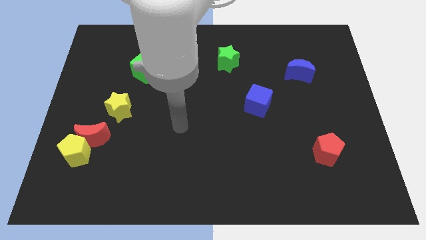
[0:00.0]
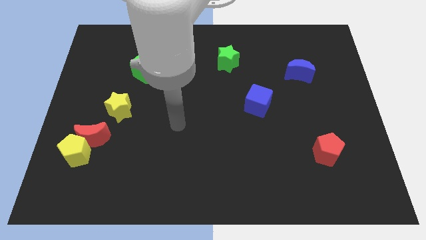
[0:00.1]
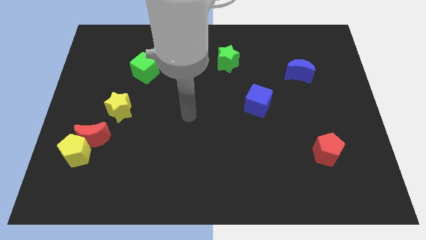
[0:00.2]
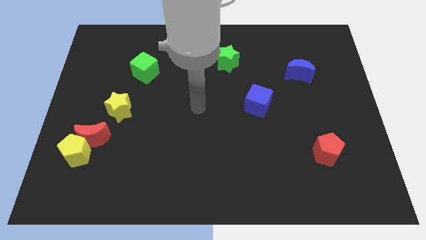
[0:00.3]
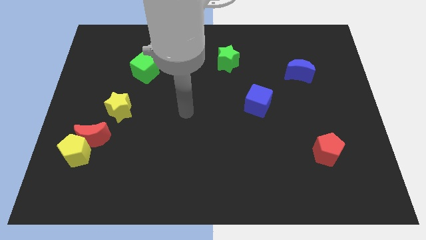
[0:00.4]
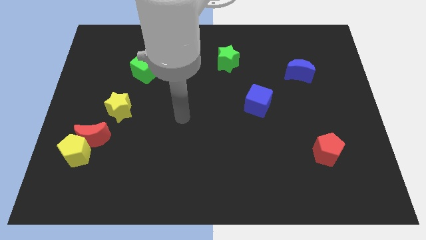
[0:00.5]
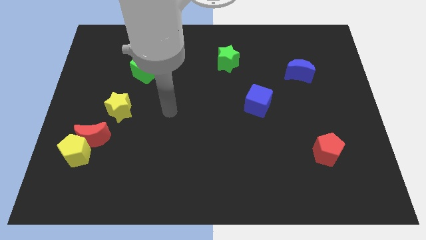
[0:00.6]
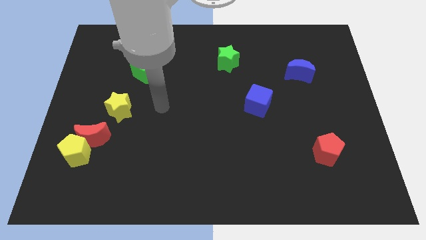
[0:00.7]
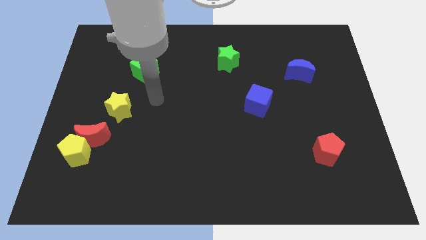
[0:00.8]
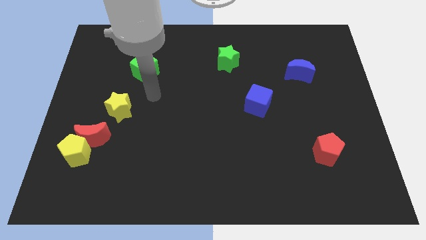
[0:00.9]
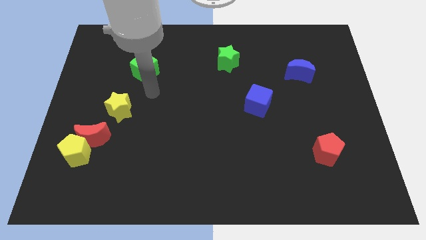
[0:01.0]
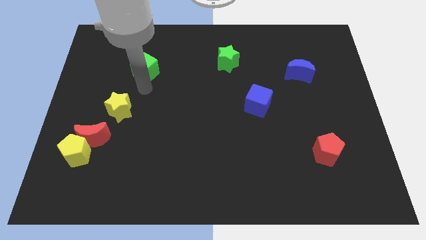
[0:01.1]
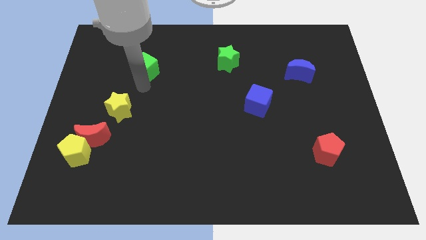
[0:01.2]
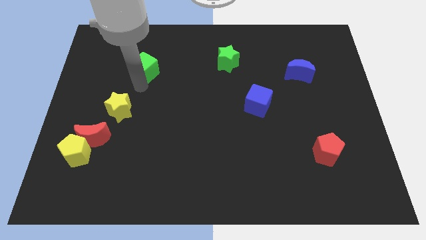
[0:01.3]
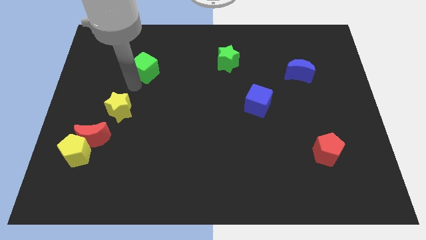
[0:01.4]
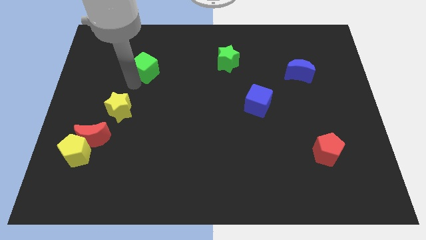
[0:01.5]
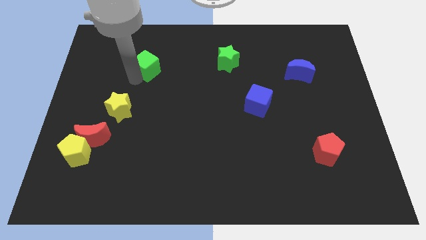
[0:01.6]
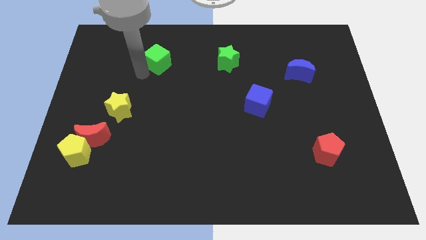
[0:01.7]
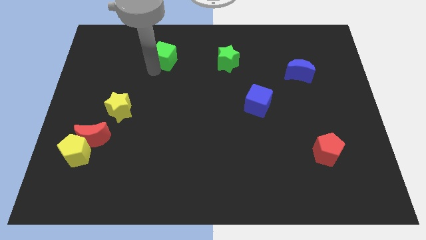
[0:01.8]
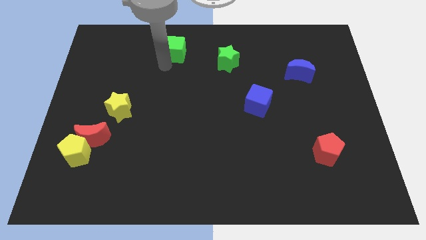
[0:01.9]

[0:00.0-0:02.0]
slightly move the green cube towards the green star

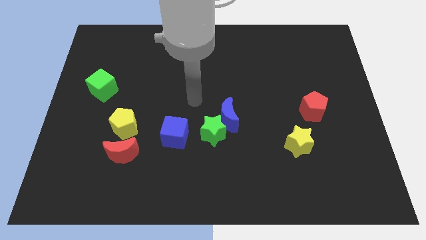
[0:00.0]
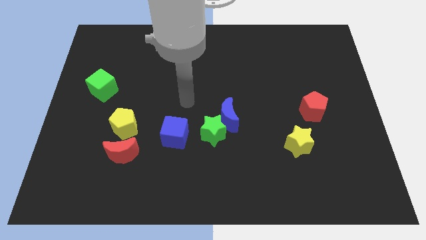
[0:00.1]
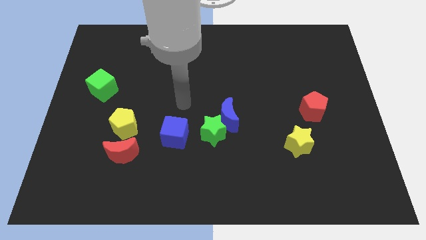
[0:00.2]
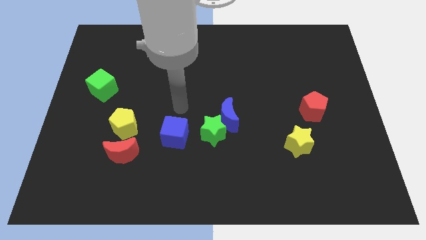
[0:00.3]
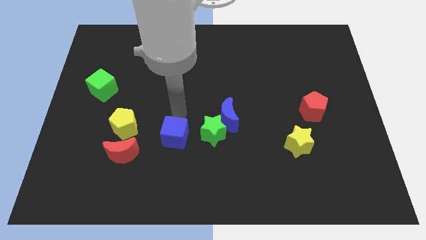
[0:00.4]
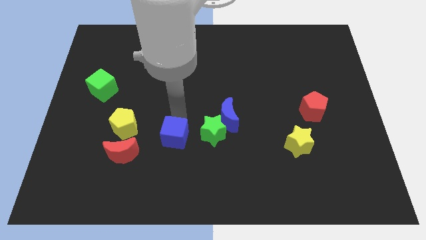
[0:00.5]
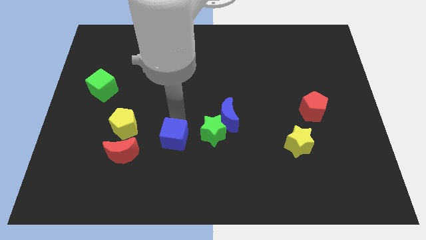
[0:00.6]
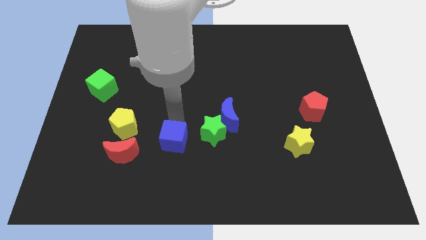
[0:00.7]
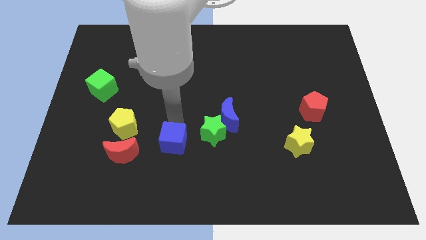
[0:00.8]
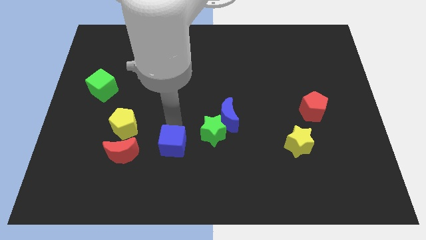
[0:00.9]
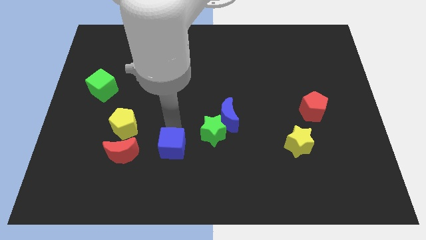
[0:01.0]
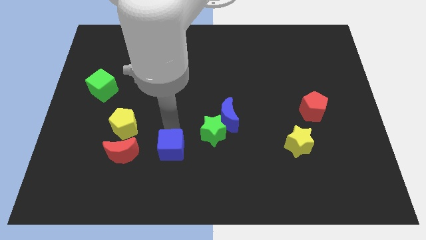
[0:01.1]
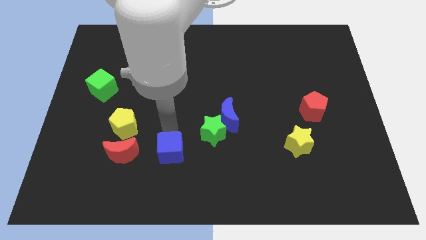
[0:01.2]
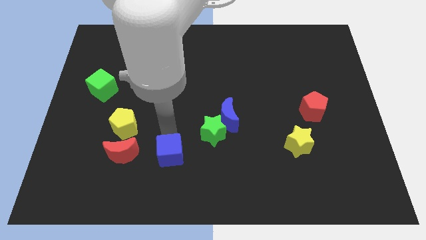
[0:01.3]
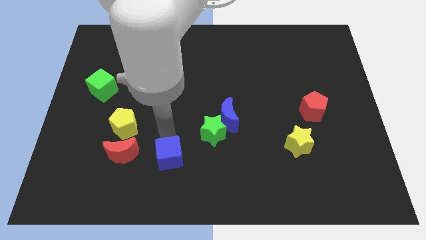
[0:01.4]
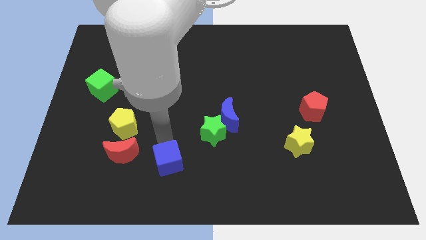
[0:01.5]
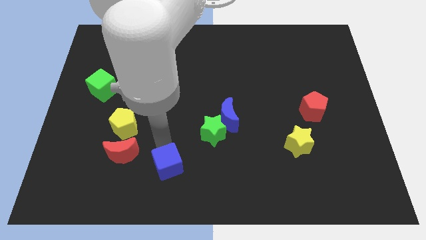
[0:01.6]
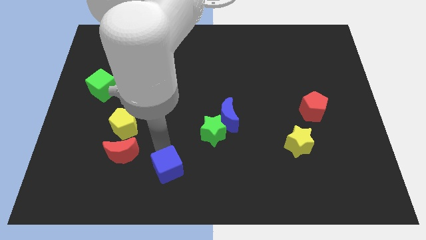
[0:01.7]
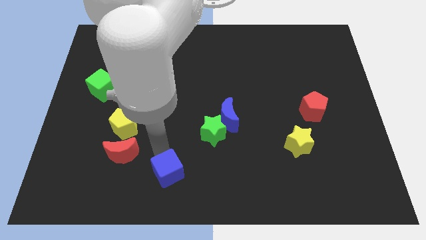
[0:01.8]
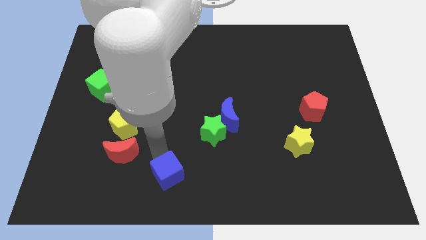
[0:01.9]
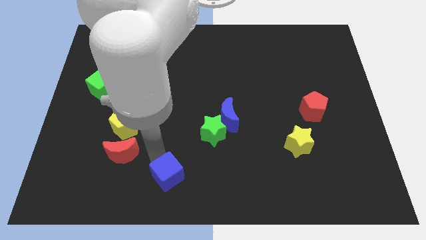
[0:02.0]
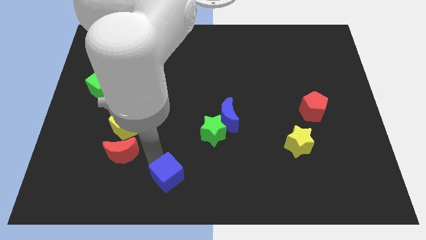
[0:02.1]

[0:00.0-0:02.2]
push the blue cube to the bottom right of the red crescent

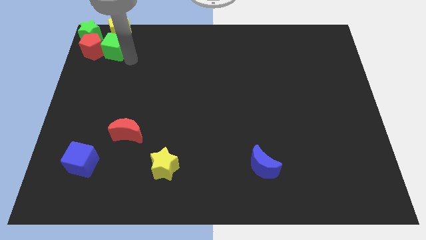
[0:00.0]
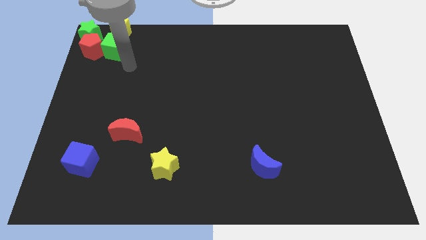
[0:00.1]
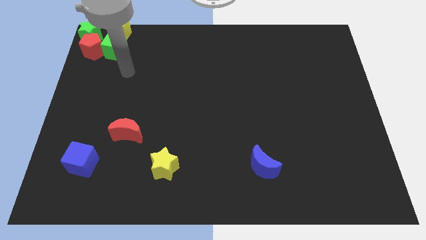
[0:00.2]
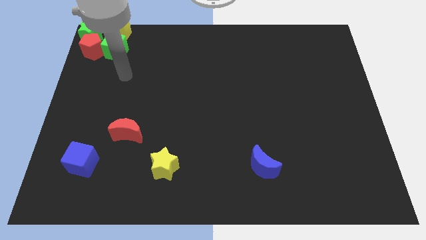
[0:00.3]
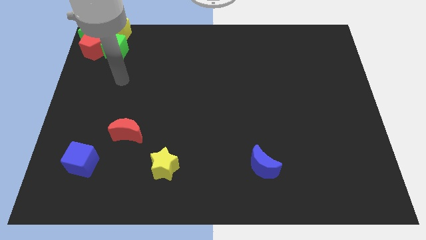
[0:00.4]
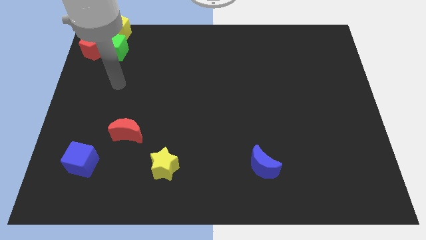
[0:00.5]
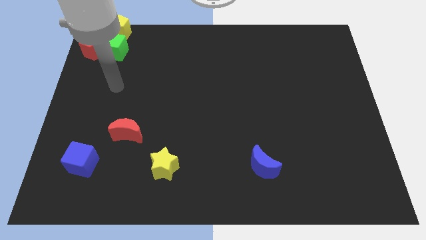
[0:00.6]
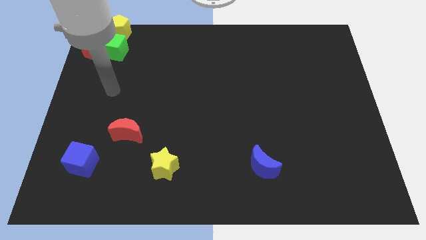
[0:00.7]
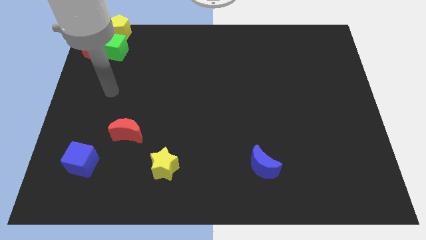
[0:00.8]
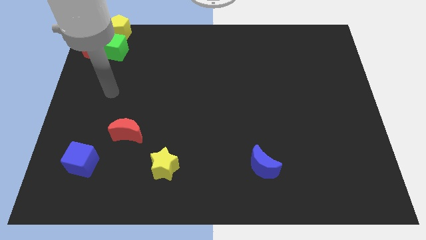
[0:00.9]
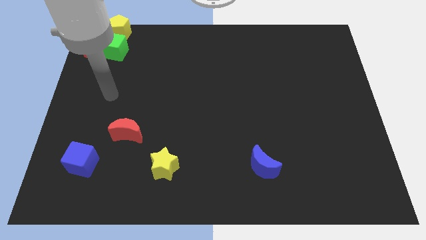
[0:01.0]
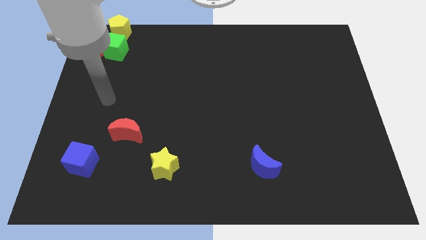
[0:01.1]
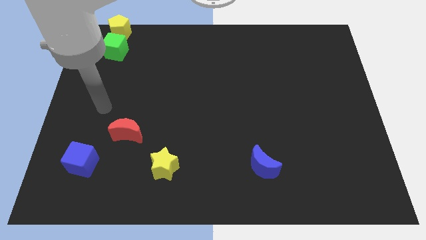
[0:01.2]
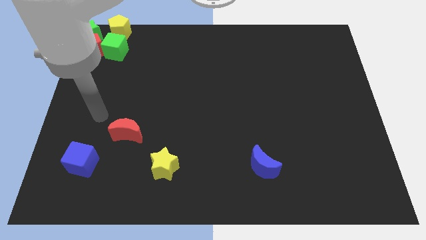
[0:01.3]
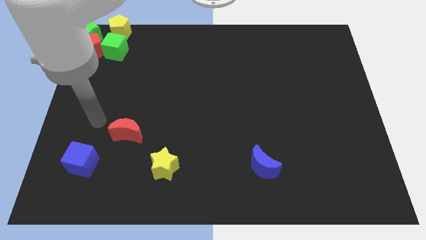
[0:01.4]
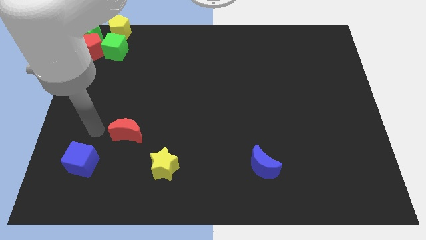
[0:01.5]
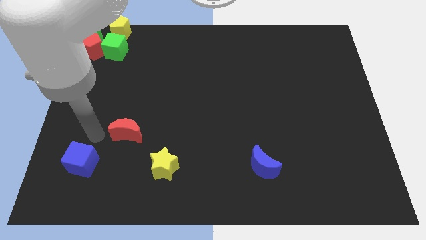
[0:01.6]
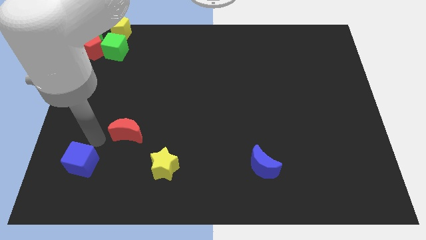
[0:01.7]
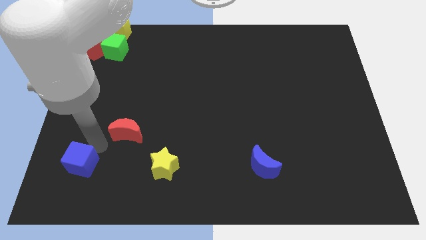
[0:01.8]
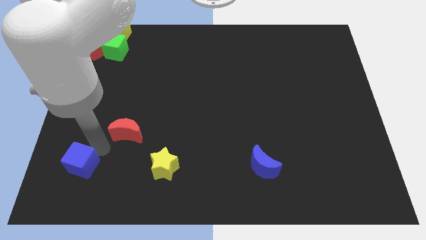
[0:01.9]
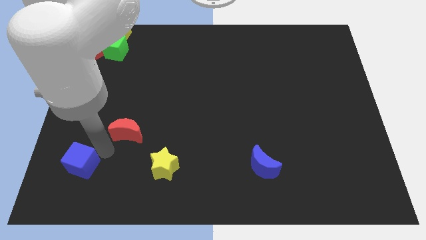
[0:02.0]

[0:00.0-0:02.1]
point your arm between blue cube and red moon

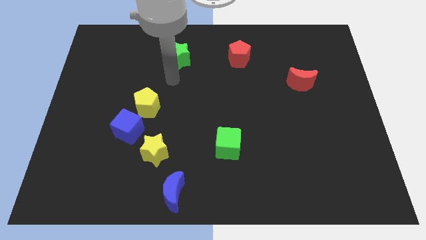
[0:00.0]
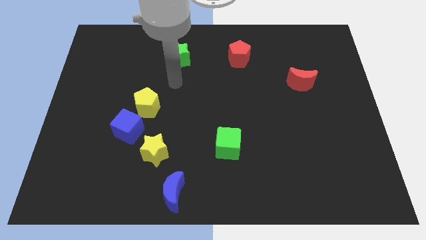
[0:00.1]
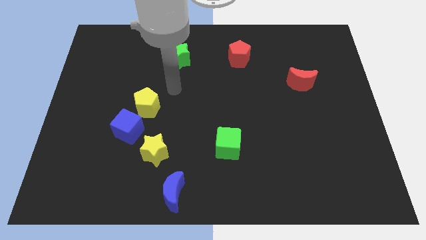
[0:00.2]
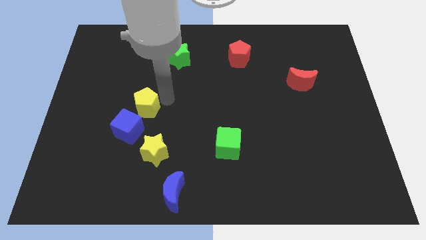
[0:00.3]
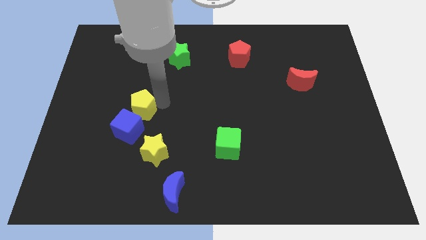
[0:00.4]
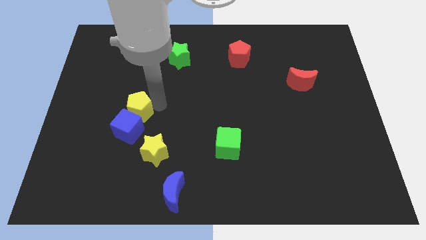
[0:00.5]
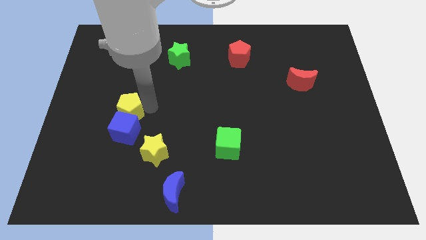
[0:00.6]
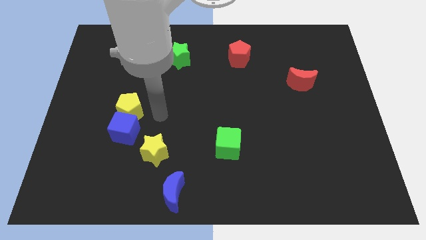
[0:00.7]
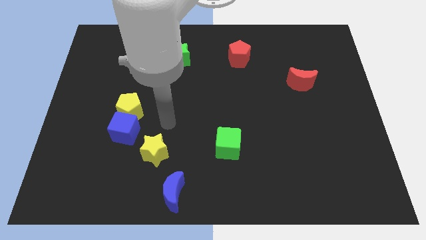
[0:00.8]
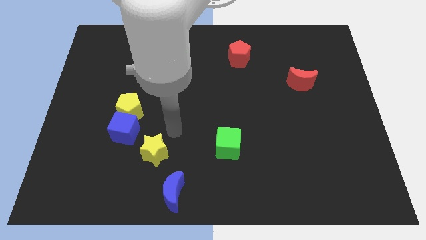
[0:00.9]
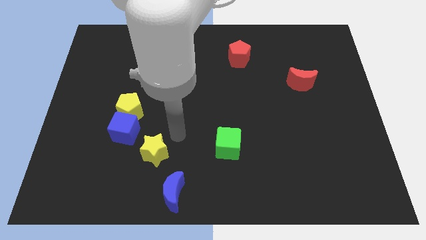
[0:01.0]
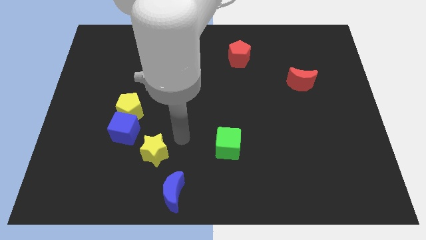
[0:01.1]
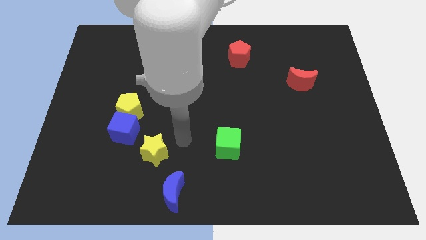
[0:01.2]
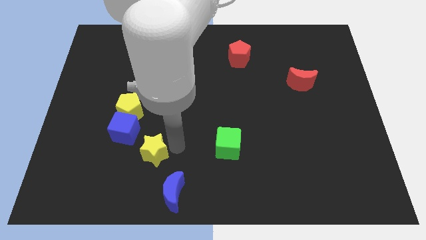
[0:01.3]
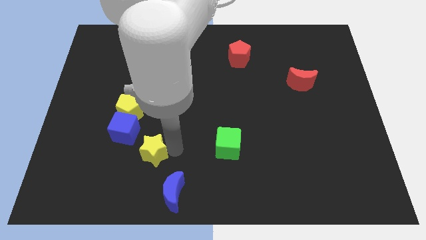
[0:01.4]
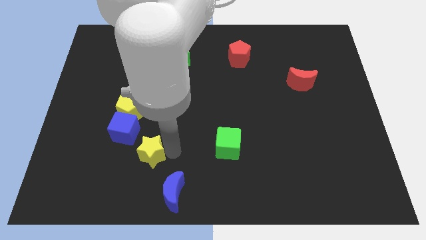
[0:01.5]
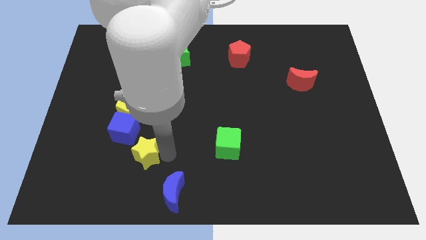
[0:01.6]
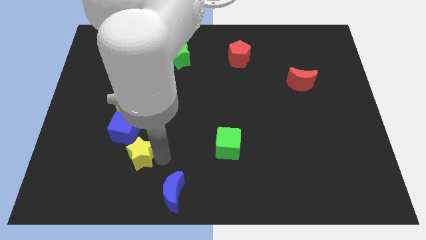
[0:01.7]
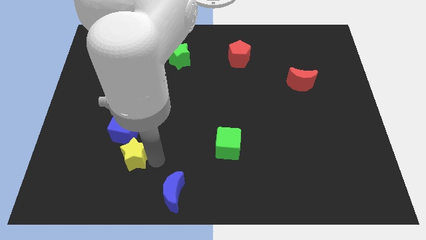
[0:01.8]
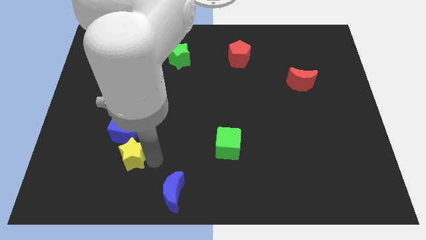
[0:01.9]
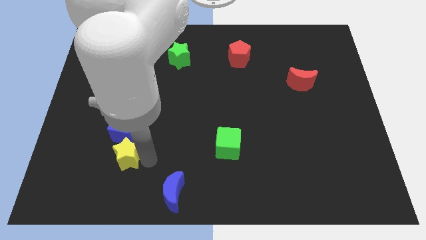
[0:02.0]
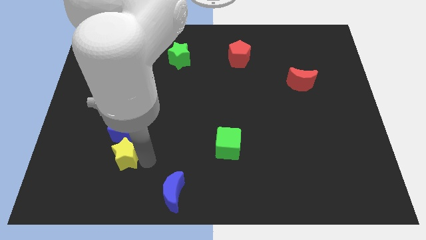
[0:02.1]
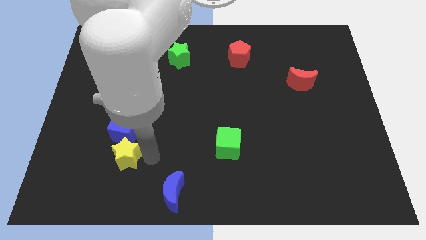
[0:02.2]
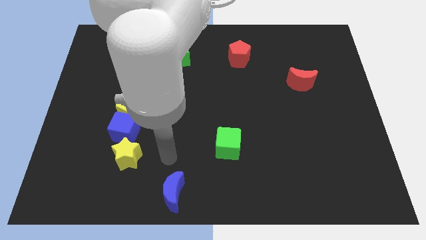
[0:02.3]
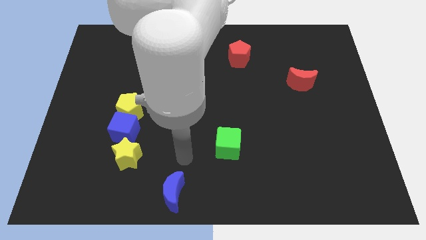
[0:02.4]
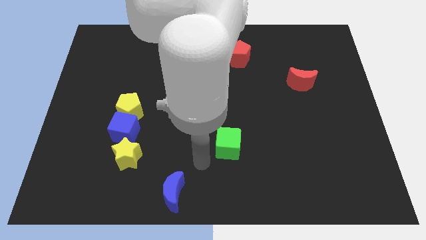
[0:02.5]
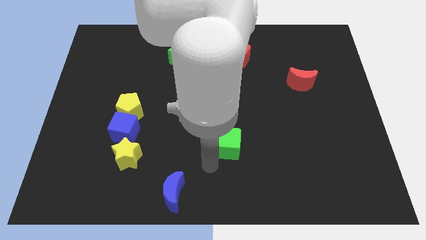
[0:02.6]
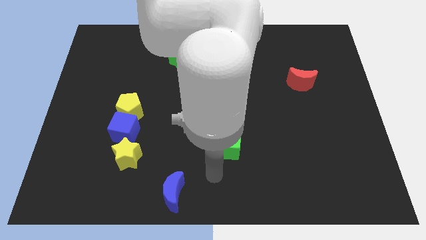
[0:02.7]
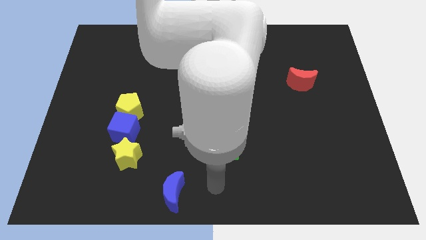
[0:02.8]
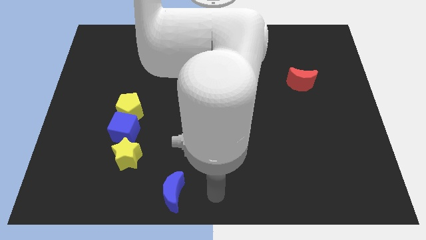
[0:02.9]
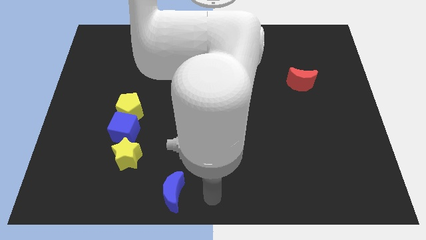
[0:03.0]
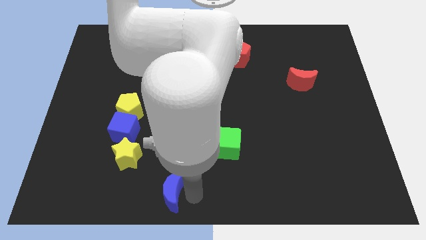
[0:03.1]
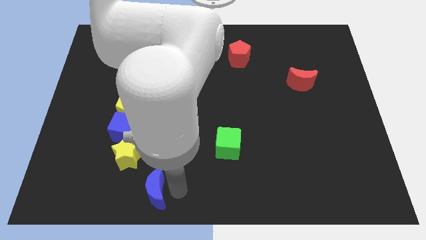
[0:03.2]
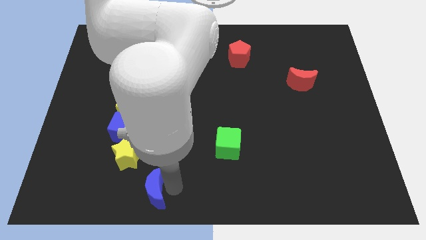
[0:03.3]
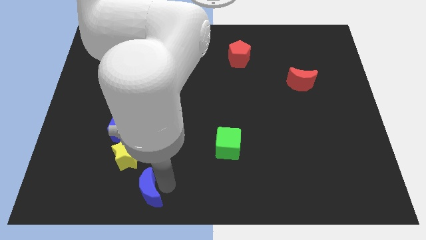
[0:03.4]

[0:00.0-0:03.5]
slightly move the blue moon yellow star to the bottom center
